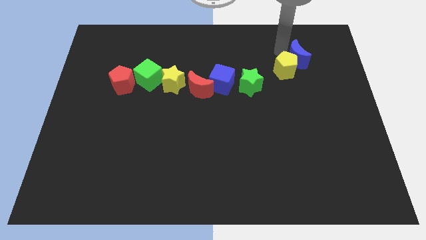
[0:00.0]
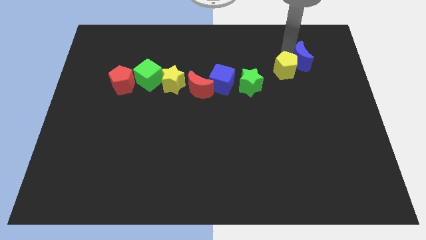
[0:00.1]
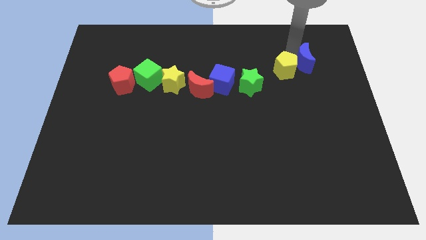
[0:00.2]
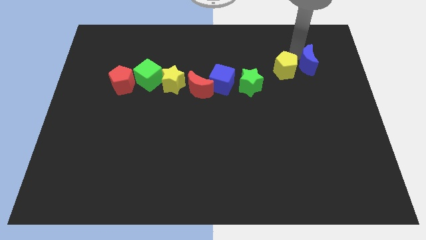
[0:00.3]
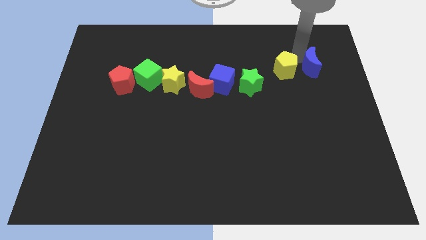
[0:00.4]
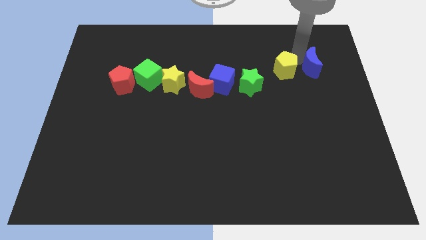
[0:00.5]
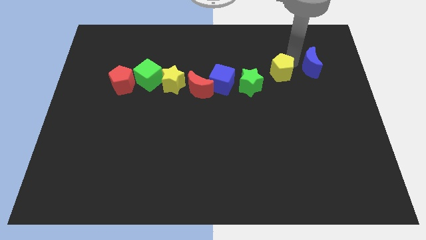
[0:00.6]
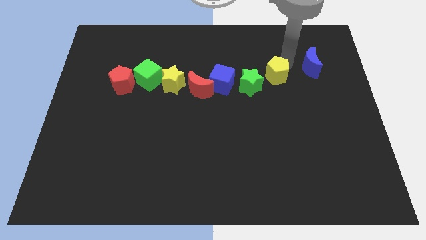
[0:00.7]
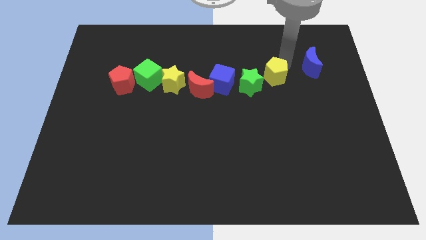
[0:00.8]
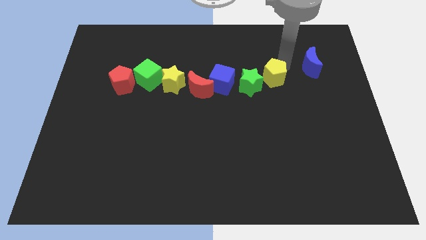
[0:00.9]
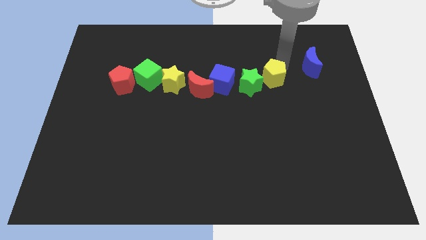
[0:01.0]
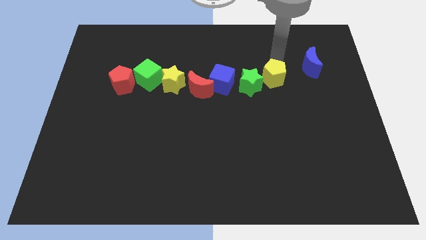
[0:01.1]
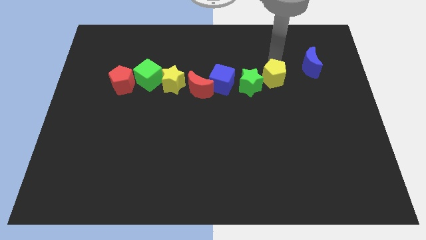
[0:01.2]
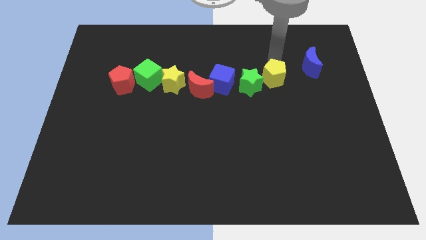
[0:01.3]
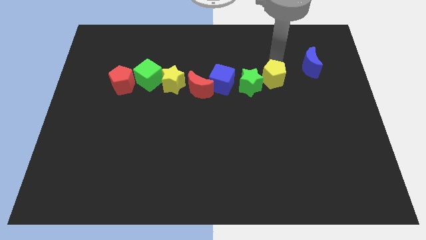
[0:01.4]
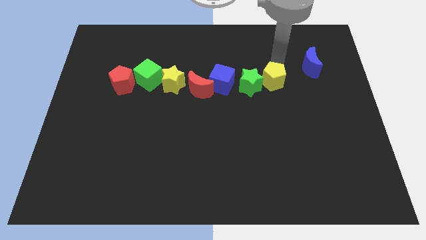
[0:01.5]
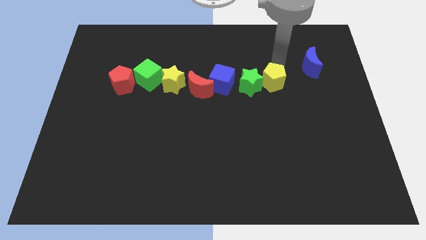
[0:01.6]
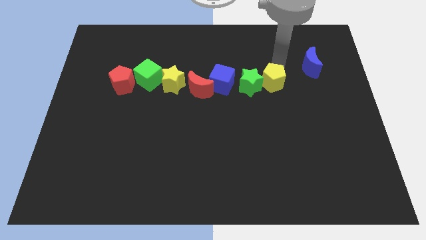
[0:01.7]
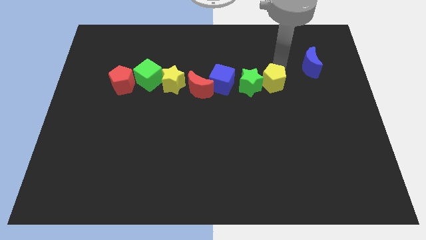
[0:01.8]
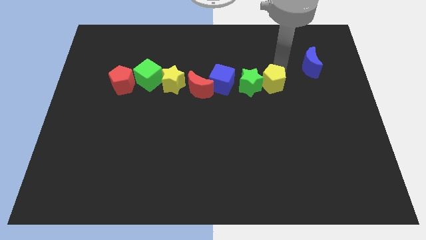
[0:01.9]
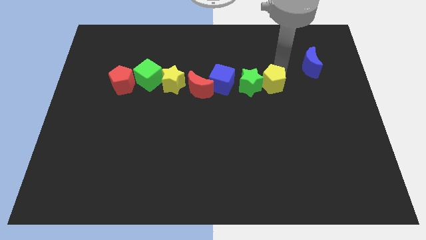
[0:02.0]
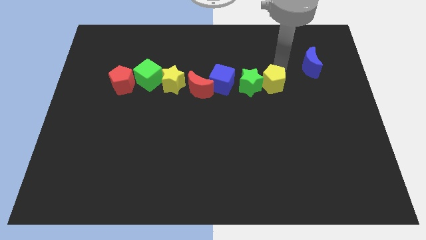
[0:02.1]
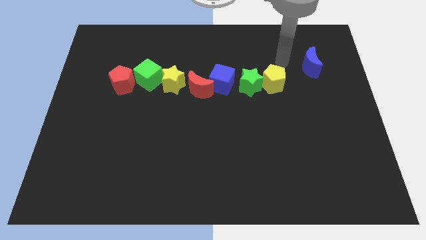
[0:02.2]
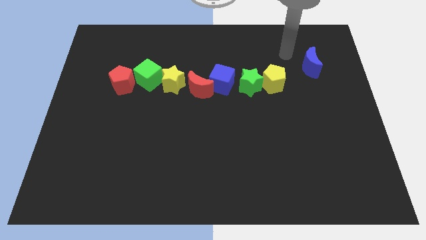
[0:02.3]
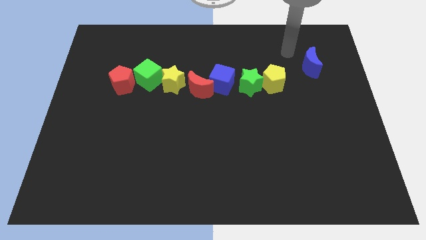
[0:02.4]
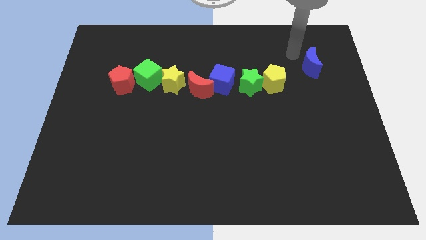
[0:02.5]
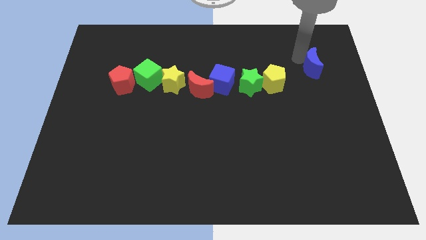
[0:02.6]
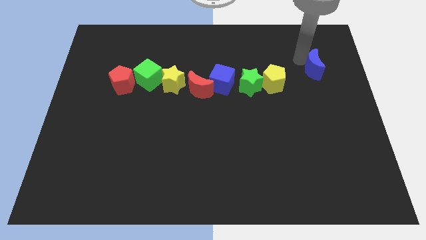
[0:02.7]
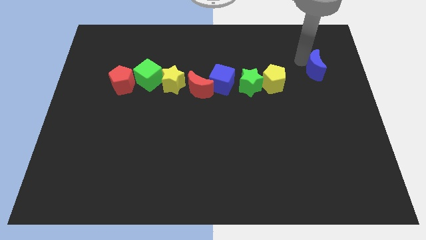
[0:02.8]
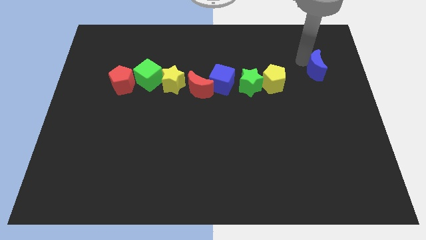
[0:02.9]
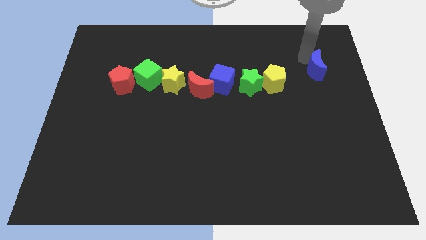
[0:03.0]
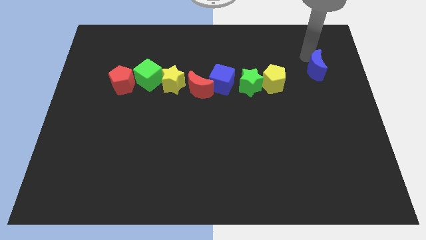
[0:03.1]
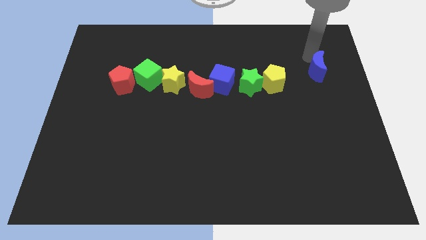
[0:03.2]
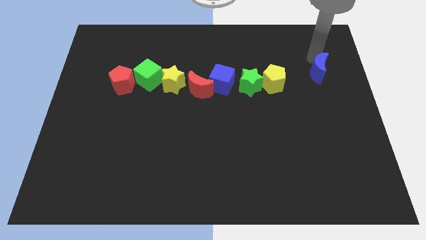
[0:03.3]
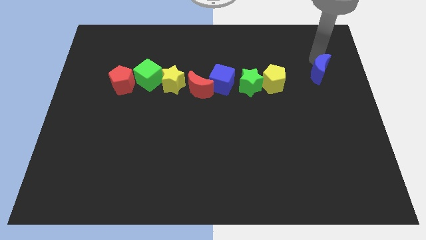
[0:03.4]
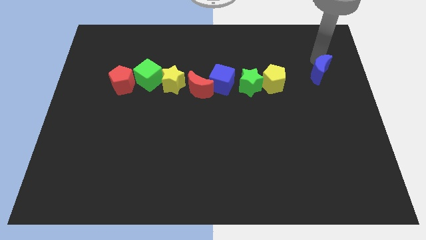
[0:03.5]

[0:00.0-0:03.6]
slide the yellow pentagon away from the blue moon

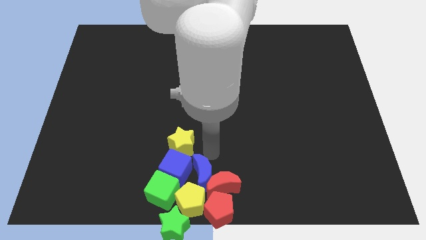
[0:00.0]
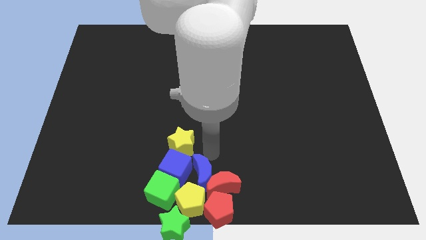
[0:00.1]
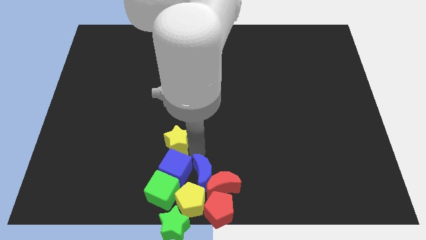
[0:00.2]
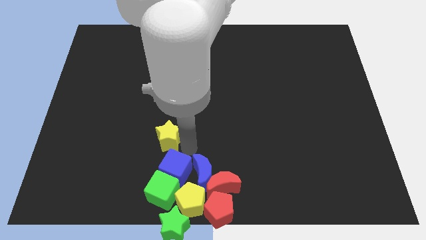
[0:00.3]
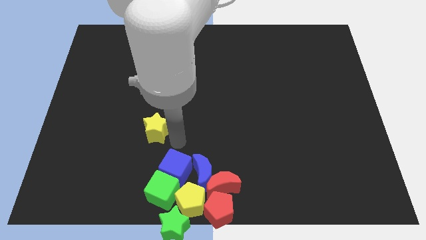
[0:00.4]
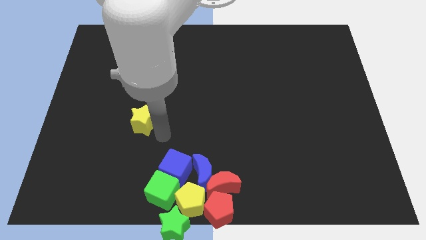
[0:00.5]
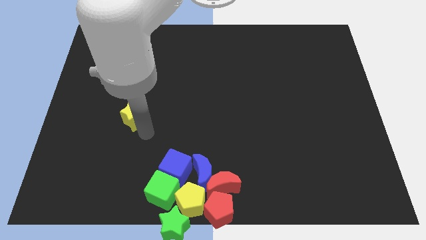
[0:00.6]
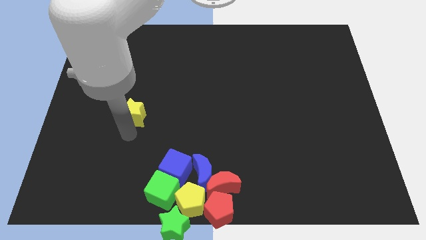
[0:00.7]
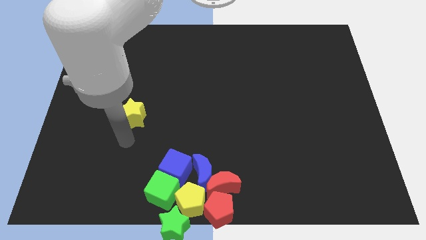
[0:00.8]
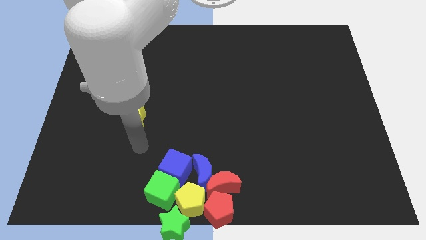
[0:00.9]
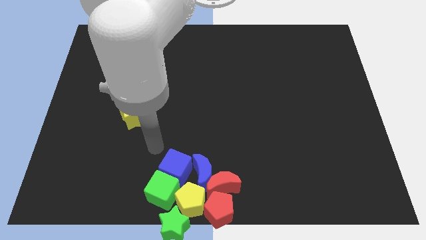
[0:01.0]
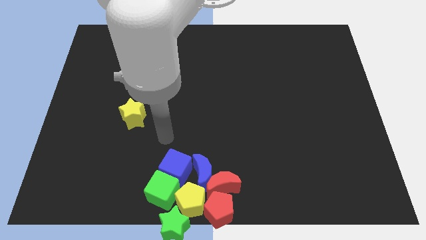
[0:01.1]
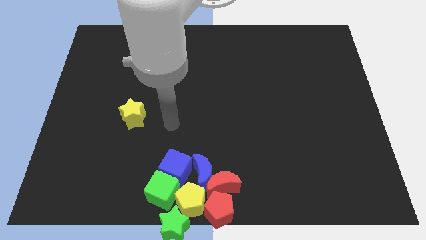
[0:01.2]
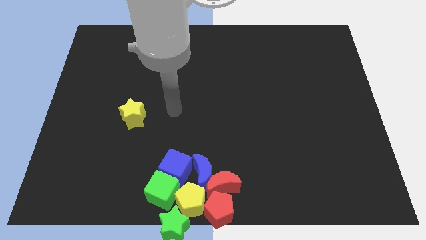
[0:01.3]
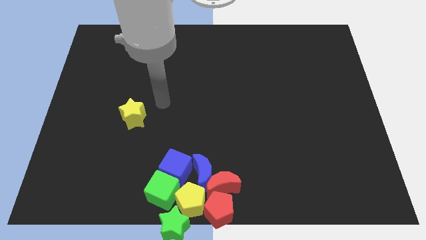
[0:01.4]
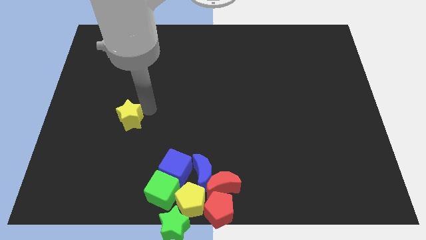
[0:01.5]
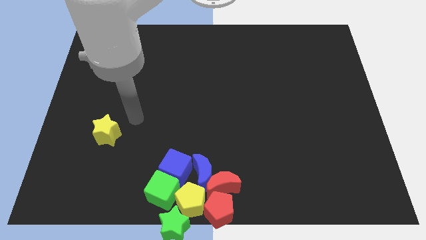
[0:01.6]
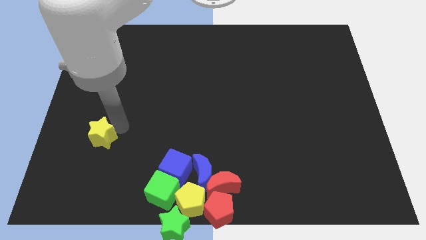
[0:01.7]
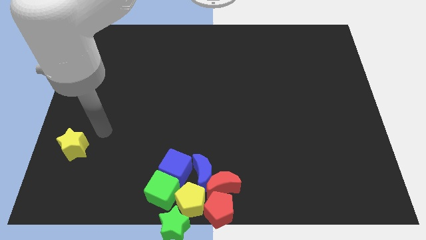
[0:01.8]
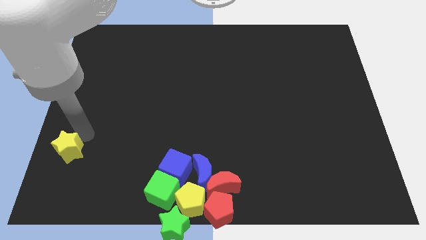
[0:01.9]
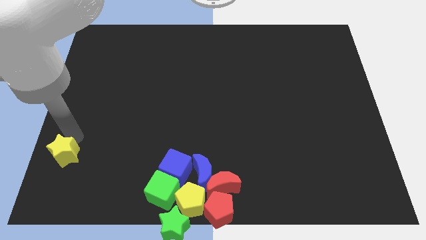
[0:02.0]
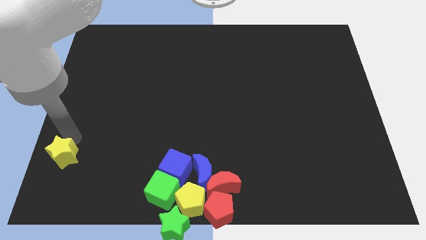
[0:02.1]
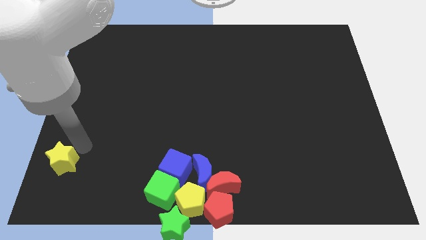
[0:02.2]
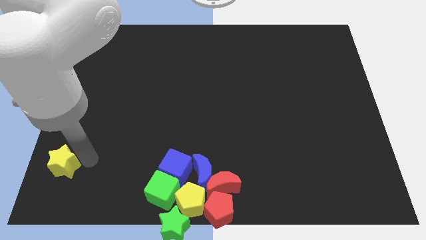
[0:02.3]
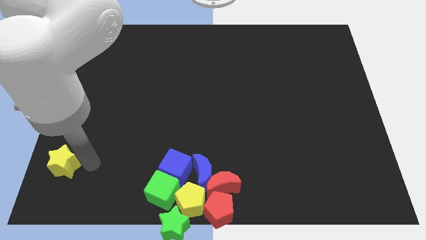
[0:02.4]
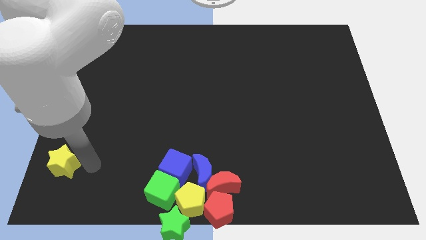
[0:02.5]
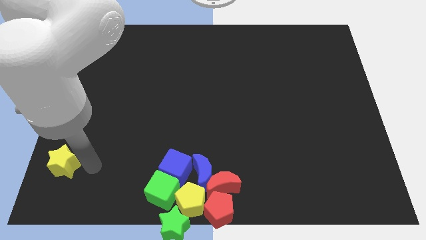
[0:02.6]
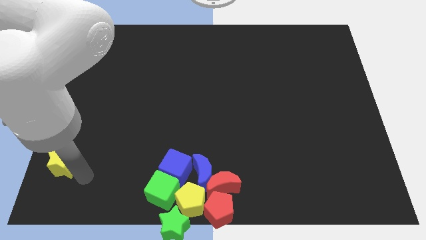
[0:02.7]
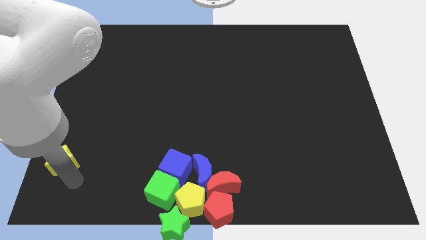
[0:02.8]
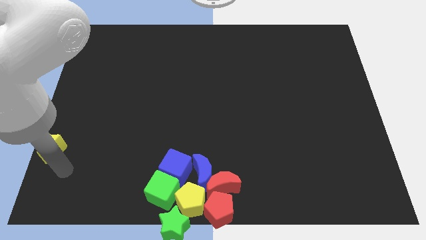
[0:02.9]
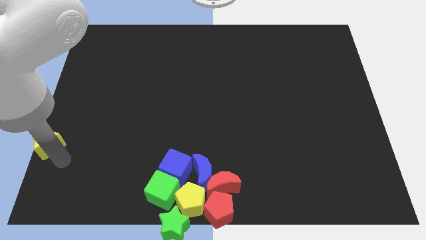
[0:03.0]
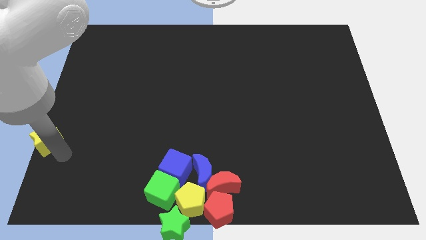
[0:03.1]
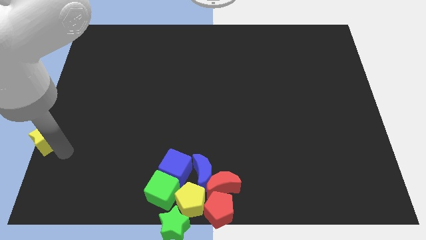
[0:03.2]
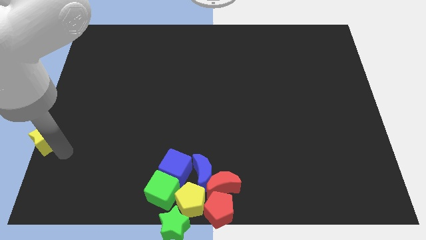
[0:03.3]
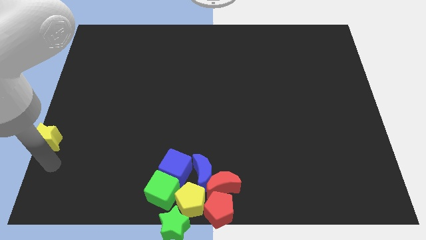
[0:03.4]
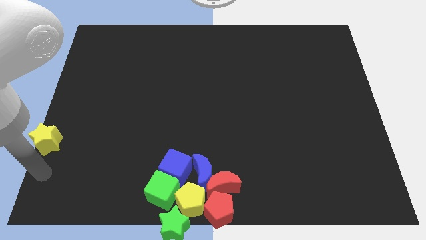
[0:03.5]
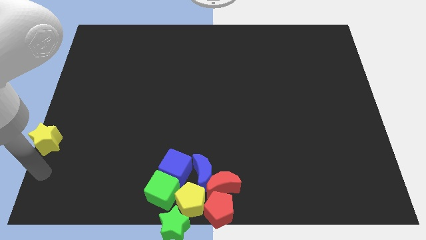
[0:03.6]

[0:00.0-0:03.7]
separate the yellow star from the blue cube

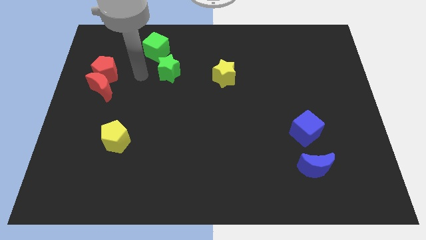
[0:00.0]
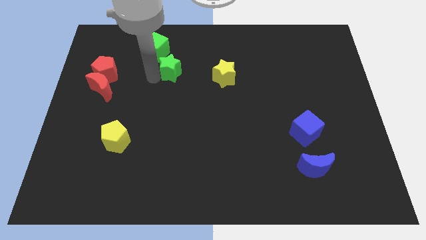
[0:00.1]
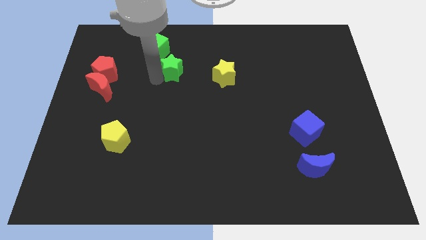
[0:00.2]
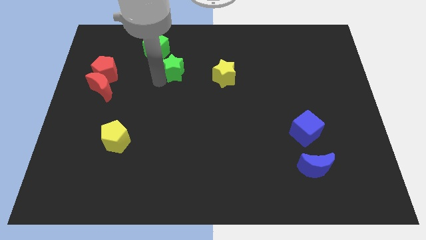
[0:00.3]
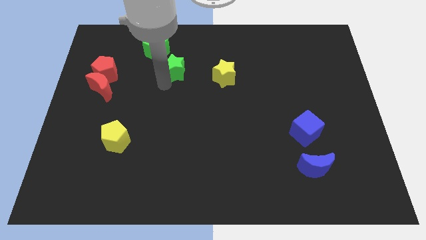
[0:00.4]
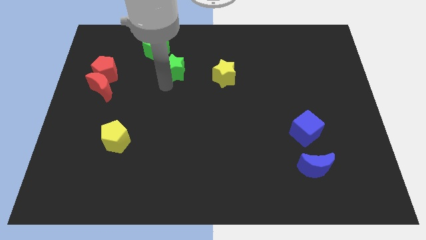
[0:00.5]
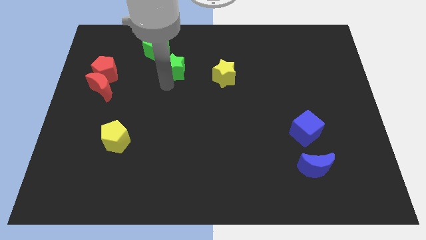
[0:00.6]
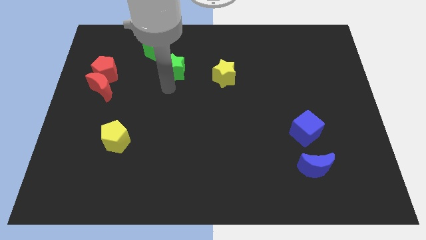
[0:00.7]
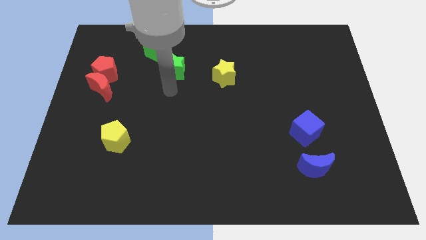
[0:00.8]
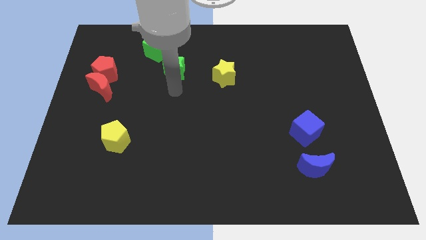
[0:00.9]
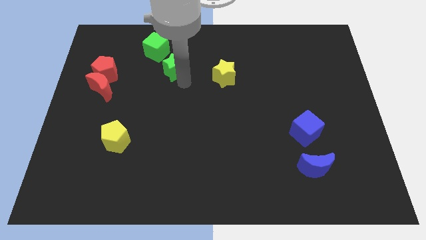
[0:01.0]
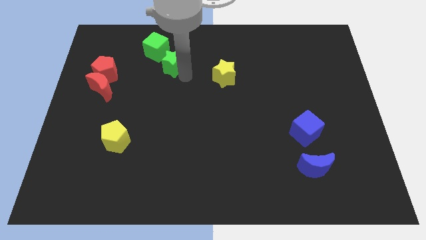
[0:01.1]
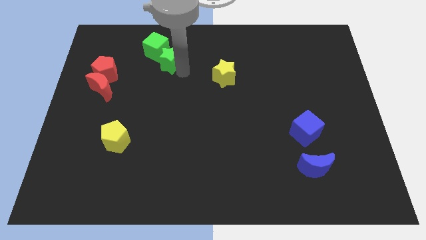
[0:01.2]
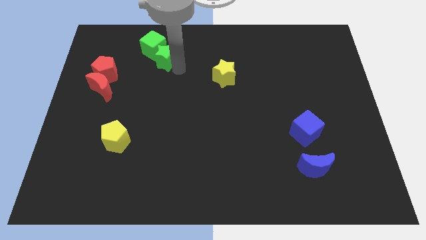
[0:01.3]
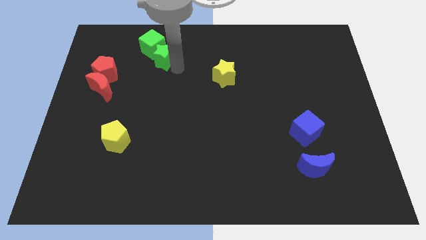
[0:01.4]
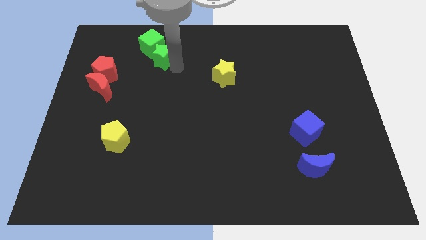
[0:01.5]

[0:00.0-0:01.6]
move the green star into the green cube
